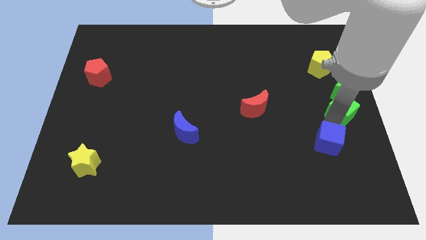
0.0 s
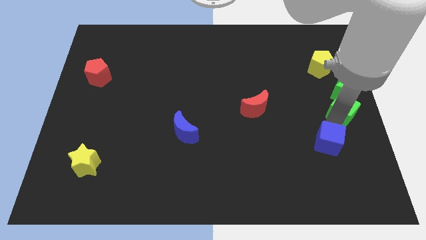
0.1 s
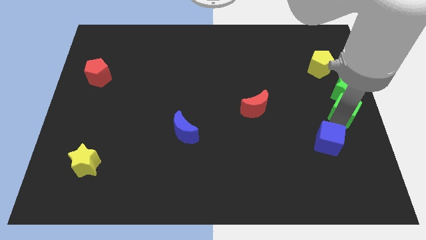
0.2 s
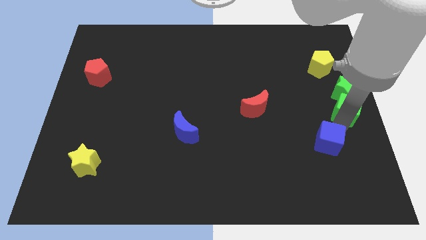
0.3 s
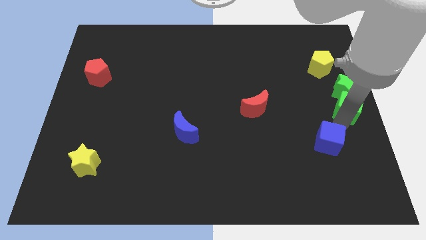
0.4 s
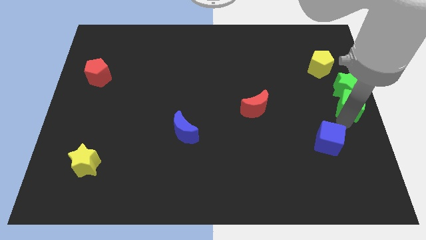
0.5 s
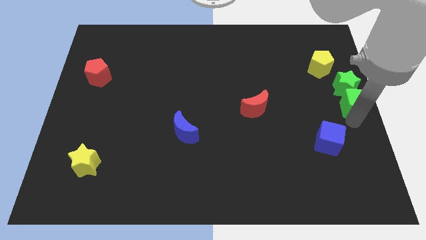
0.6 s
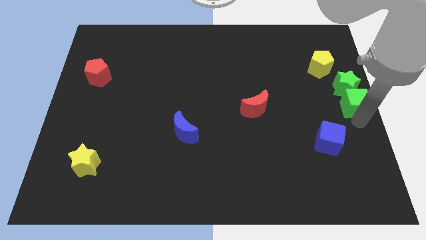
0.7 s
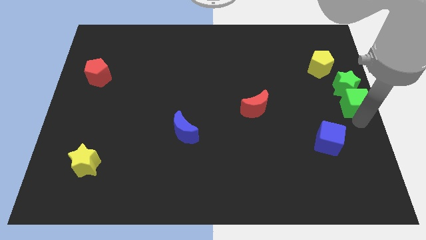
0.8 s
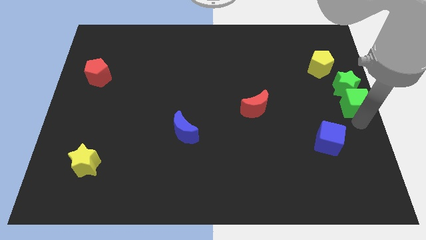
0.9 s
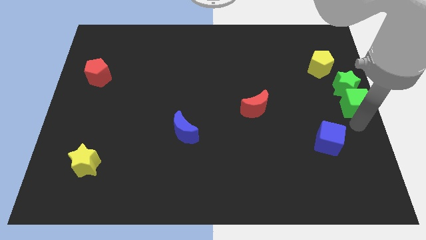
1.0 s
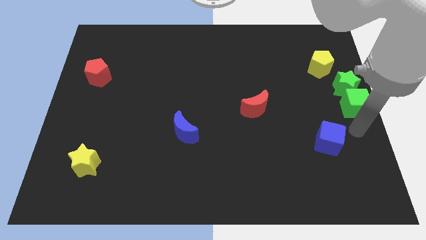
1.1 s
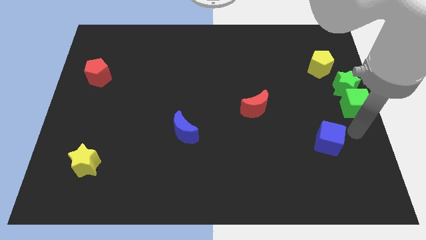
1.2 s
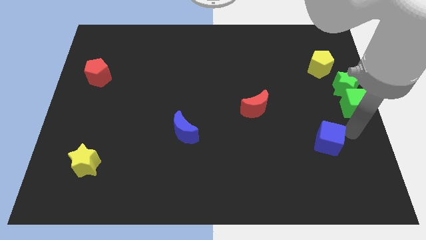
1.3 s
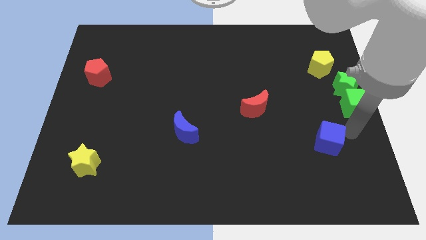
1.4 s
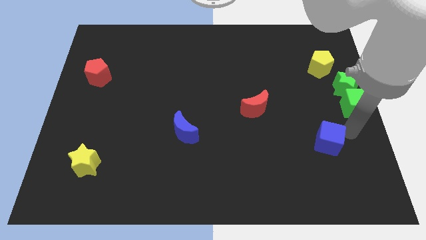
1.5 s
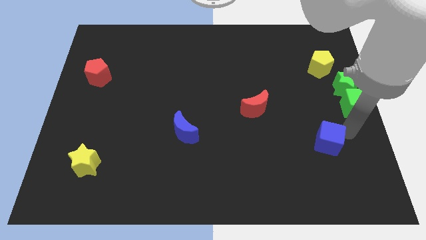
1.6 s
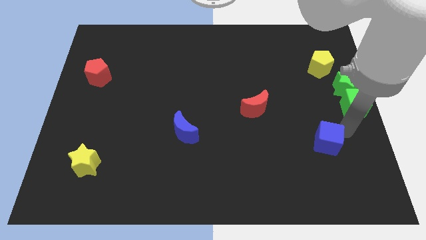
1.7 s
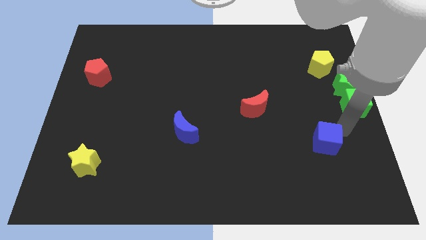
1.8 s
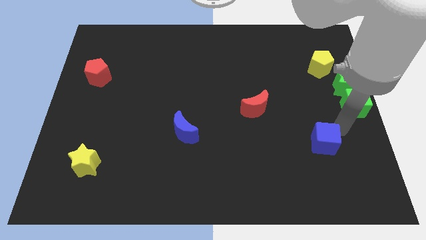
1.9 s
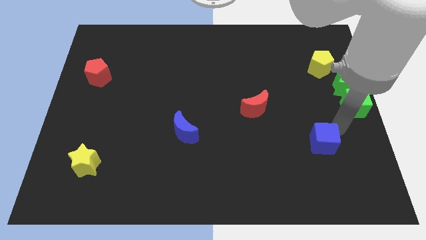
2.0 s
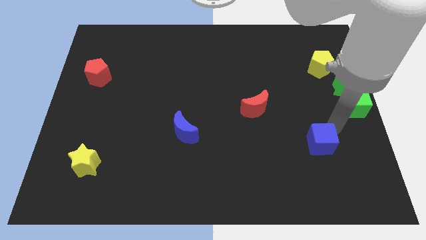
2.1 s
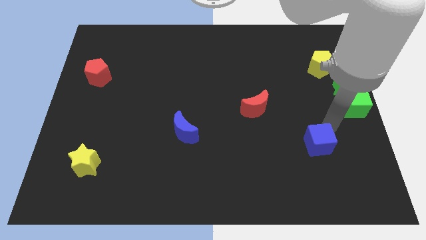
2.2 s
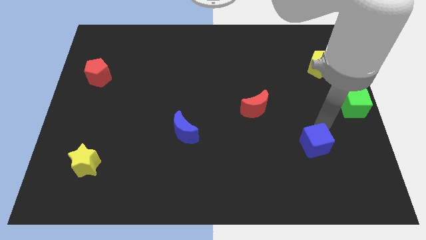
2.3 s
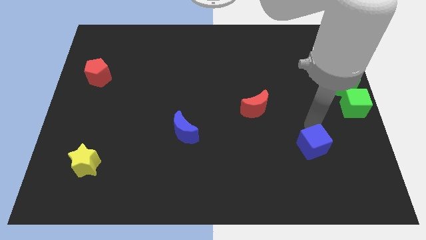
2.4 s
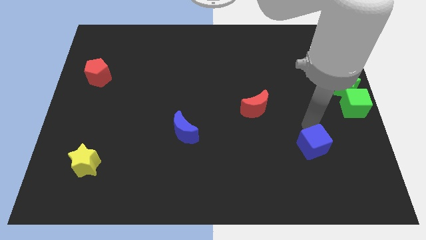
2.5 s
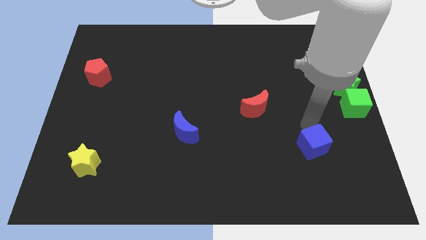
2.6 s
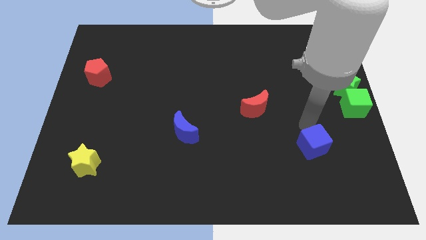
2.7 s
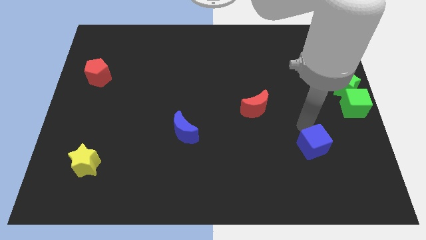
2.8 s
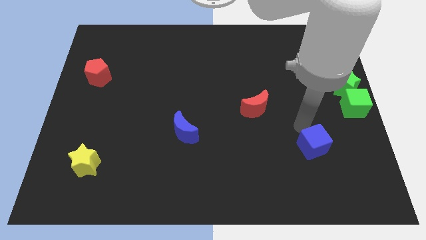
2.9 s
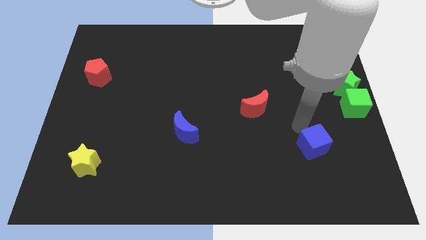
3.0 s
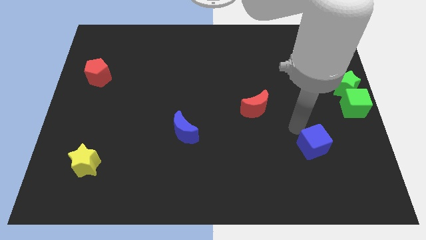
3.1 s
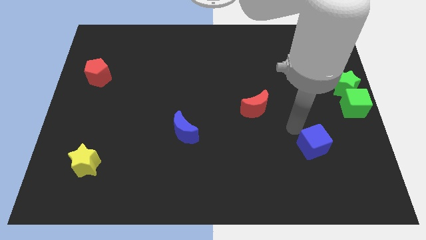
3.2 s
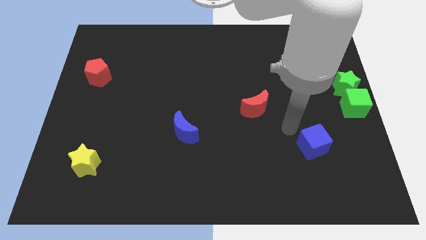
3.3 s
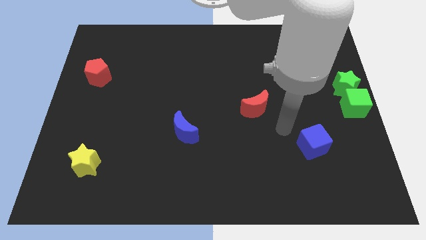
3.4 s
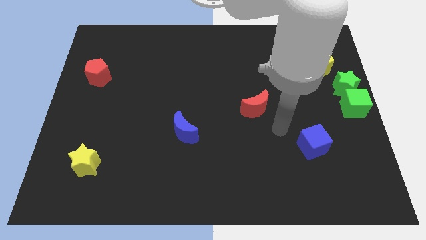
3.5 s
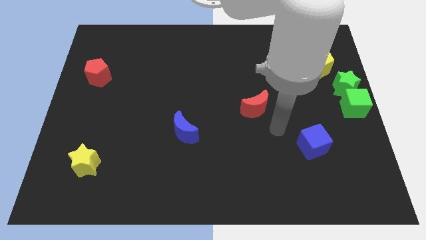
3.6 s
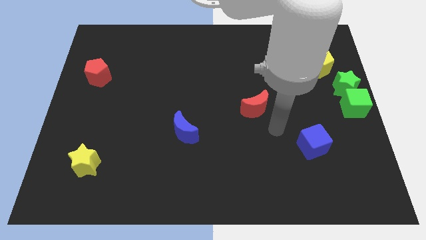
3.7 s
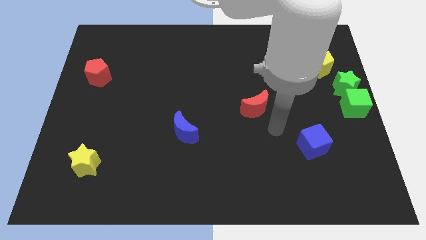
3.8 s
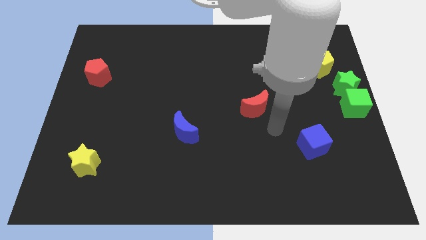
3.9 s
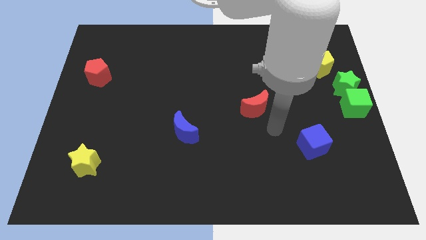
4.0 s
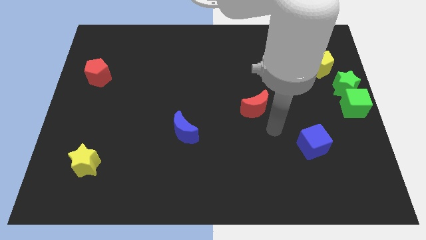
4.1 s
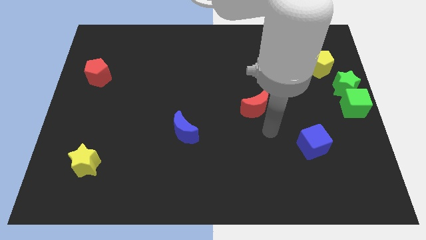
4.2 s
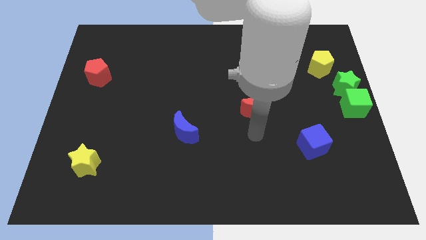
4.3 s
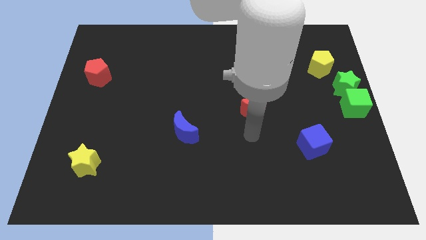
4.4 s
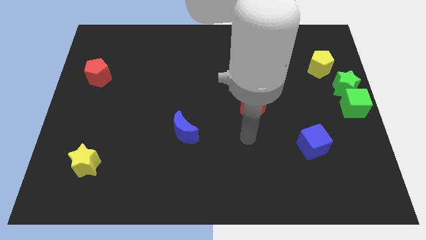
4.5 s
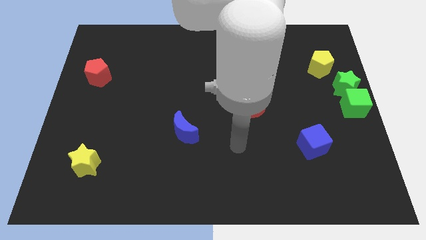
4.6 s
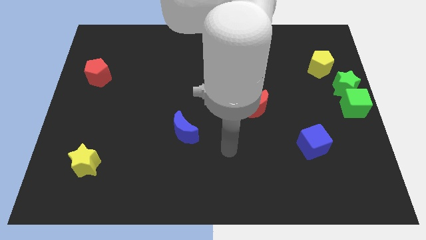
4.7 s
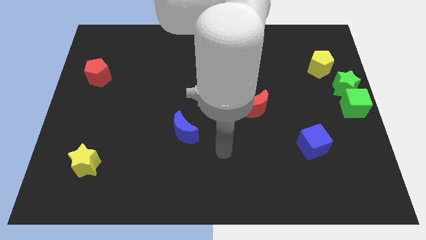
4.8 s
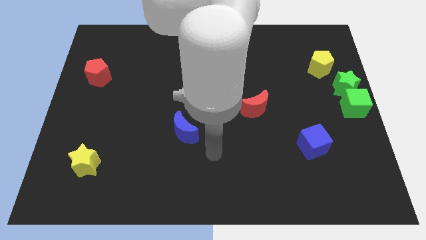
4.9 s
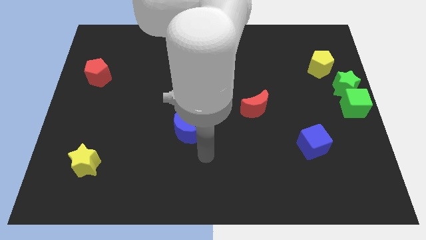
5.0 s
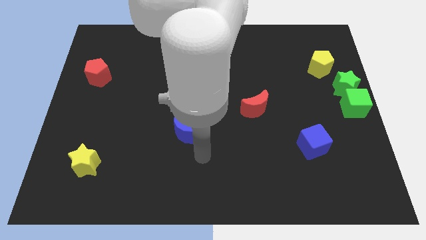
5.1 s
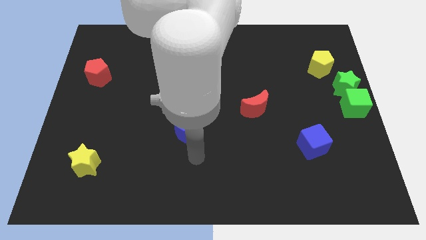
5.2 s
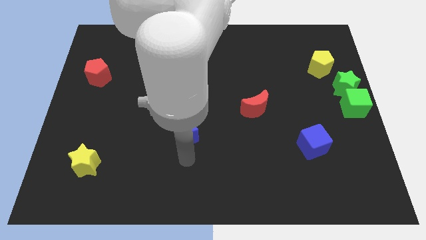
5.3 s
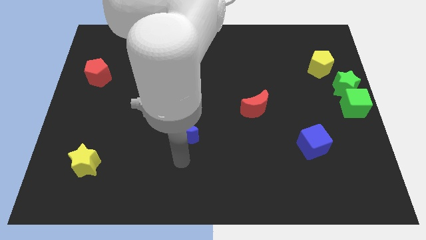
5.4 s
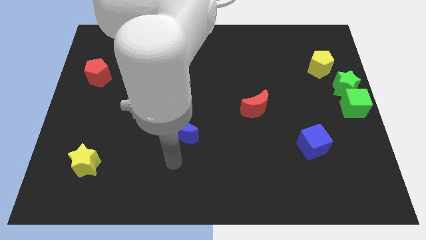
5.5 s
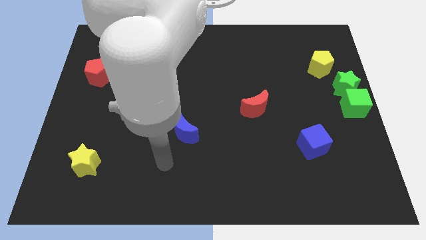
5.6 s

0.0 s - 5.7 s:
separate the blue cube from the green blocks

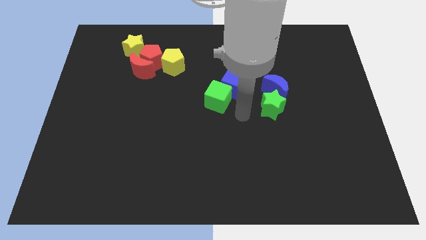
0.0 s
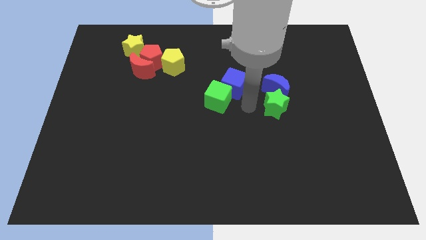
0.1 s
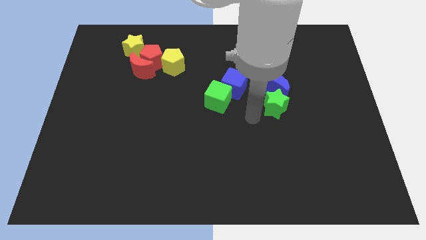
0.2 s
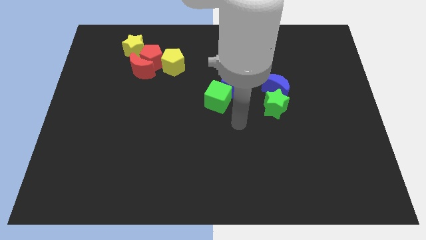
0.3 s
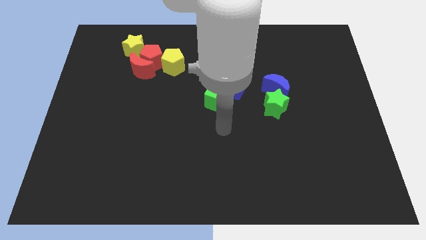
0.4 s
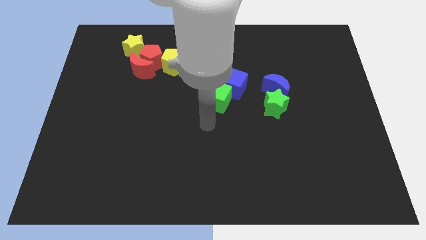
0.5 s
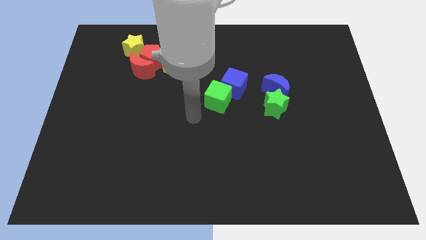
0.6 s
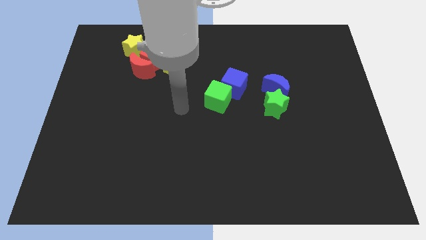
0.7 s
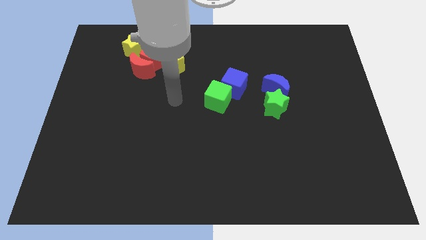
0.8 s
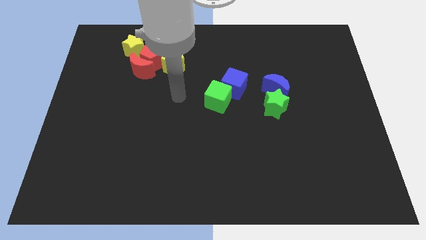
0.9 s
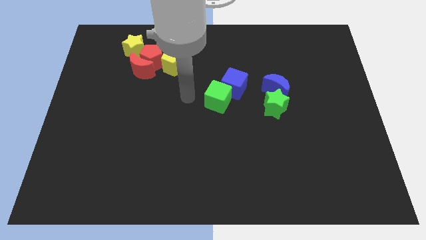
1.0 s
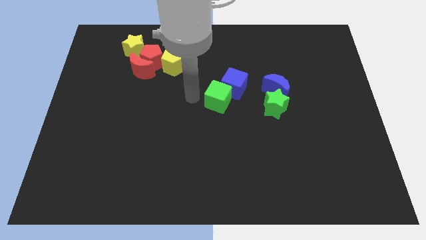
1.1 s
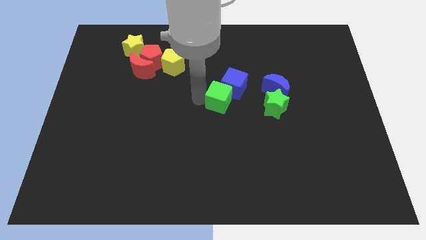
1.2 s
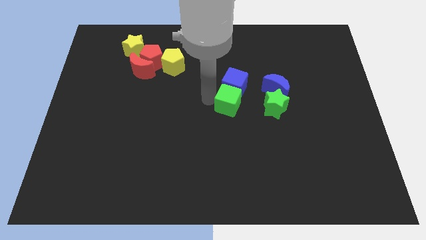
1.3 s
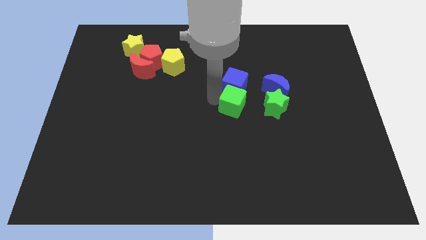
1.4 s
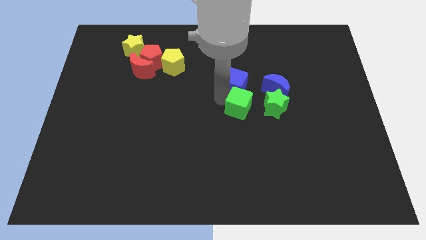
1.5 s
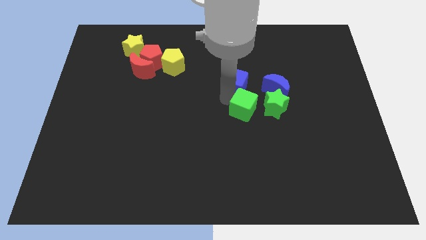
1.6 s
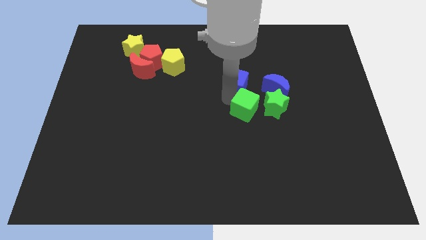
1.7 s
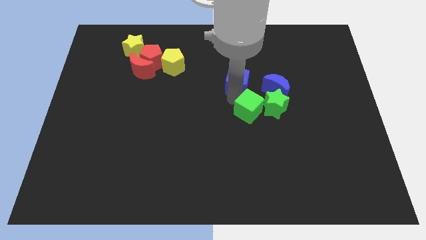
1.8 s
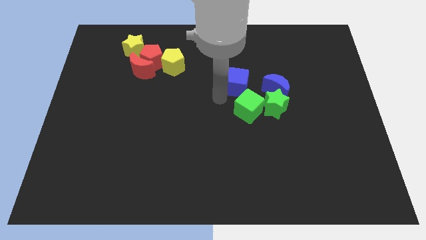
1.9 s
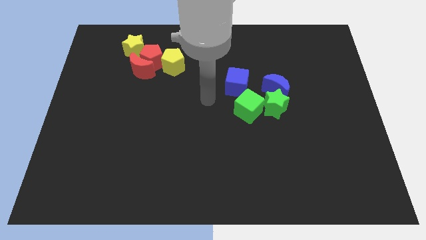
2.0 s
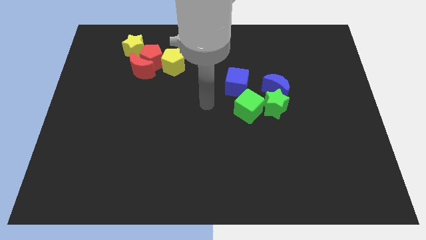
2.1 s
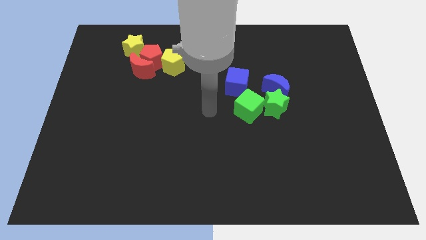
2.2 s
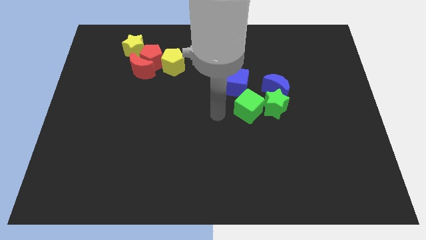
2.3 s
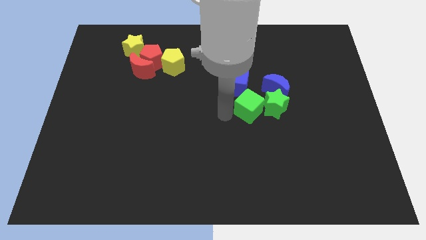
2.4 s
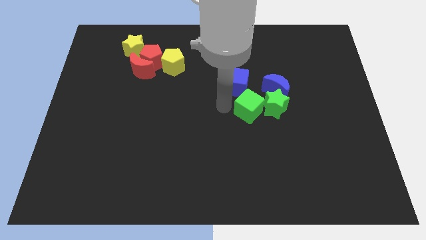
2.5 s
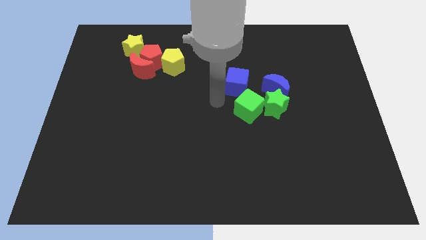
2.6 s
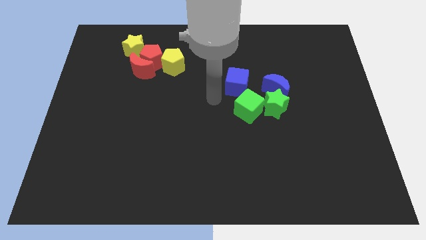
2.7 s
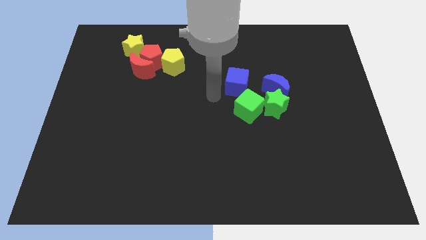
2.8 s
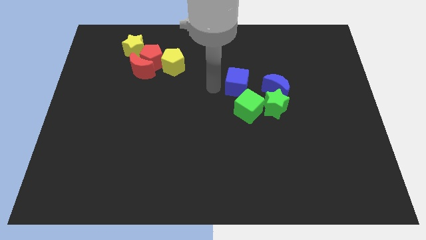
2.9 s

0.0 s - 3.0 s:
move the green cube into the green star

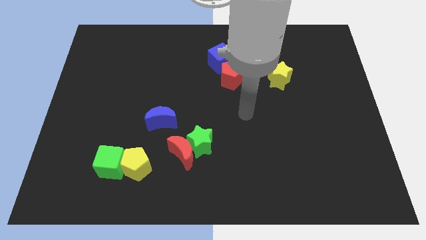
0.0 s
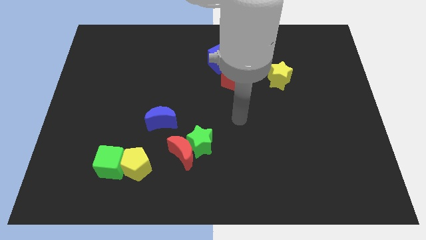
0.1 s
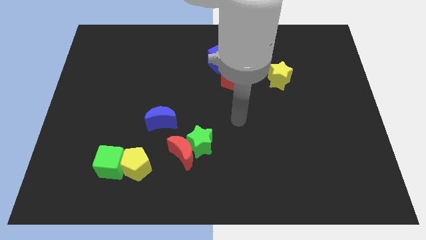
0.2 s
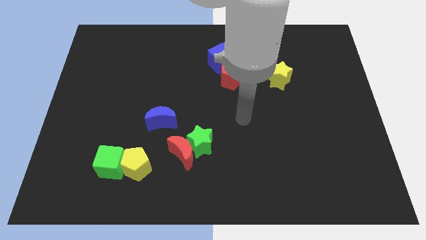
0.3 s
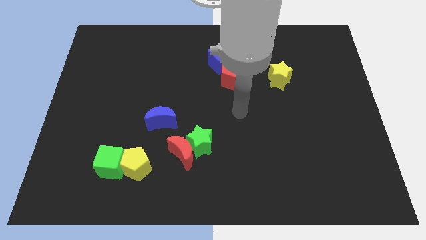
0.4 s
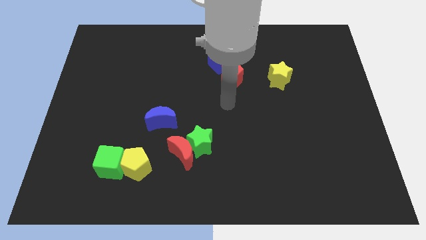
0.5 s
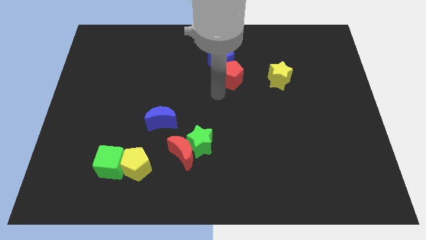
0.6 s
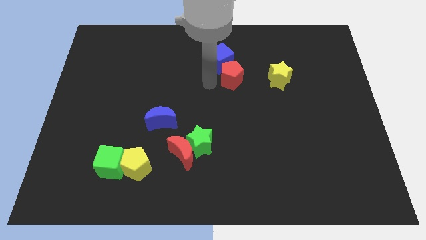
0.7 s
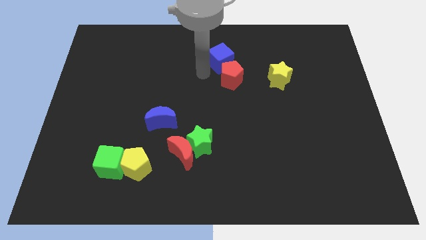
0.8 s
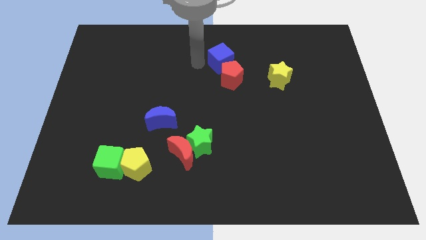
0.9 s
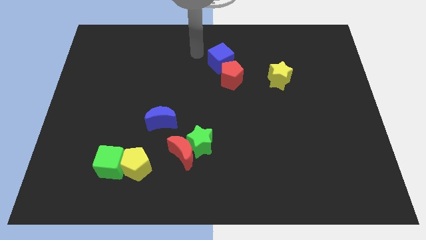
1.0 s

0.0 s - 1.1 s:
point your arm at the top left of the blue cube
